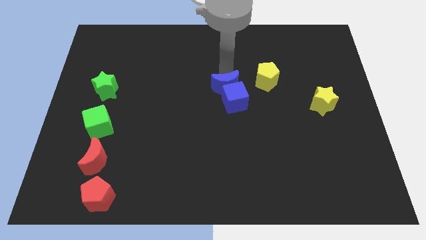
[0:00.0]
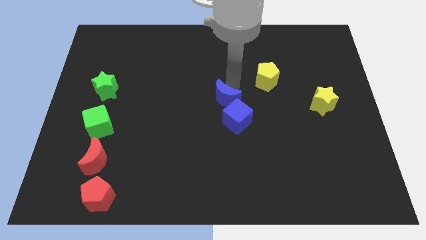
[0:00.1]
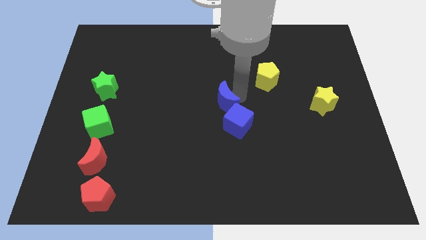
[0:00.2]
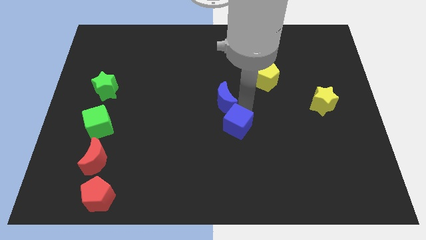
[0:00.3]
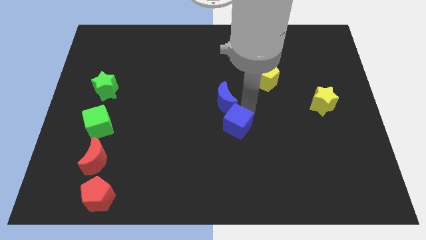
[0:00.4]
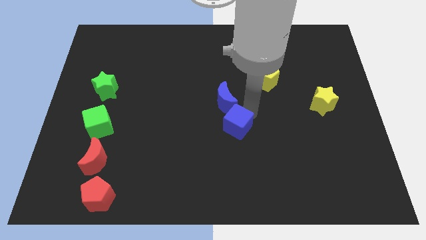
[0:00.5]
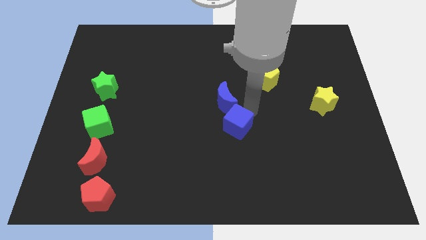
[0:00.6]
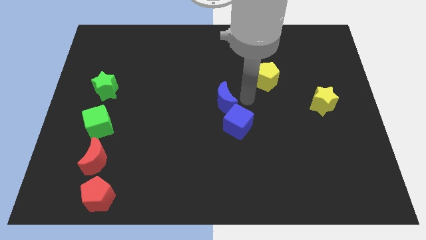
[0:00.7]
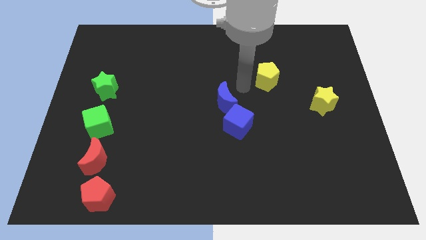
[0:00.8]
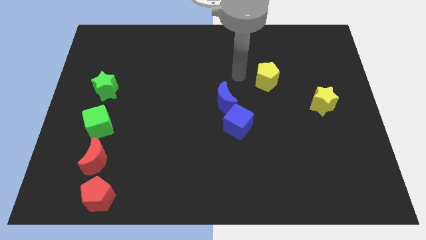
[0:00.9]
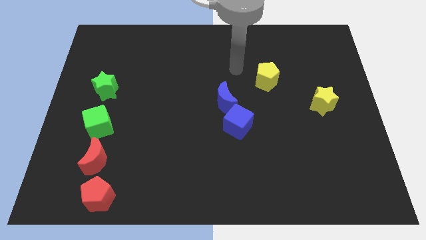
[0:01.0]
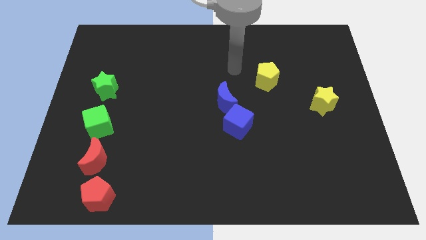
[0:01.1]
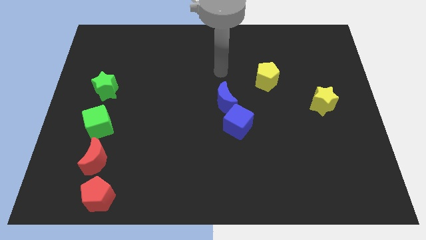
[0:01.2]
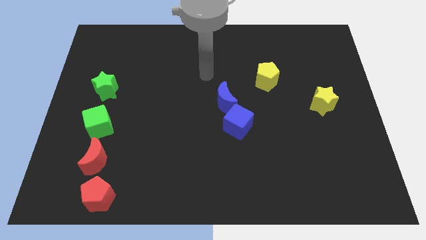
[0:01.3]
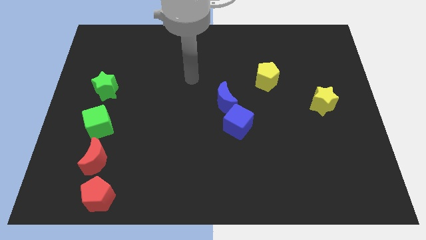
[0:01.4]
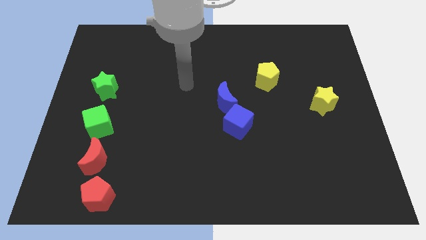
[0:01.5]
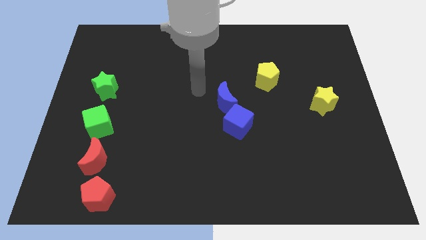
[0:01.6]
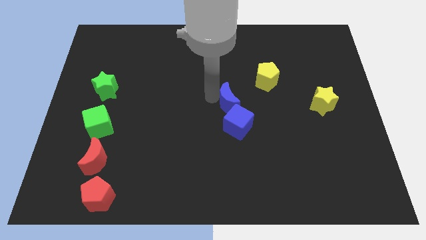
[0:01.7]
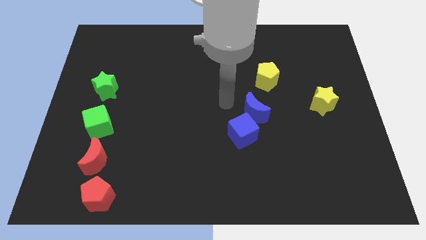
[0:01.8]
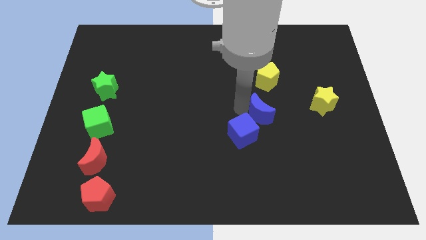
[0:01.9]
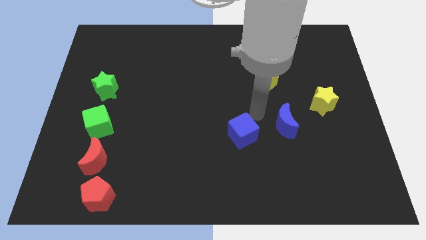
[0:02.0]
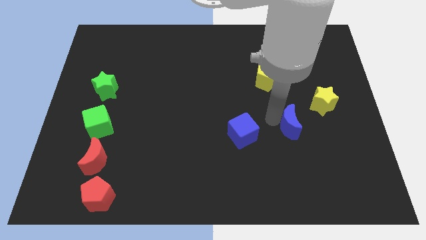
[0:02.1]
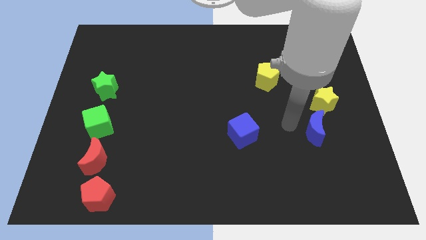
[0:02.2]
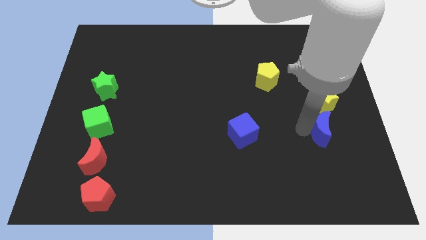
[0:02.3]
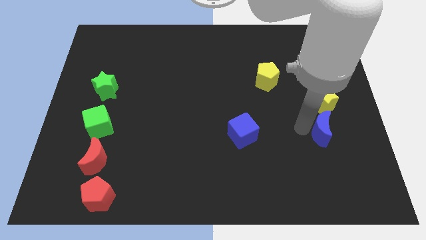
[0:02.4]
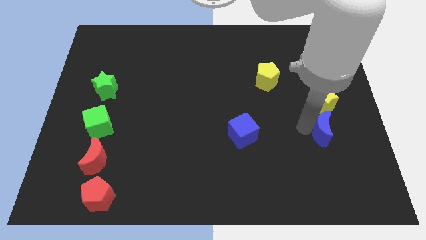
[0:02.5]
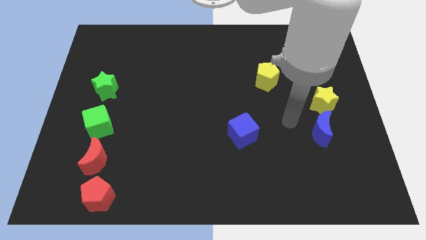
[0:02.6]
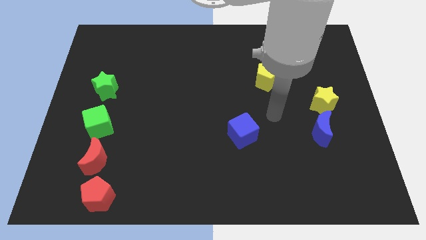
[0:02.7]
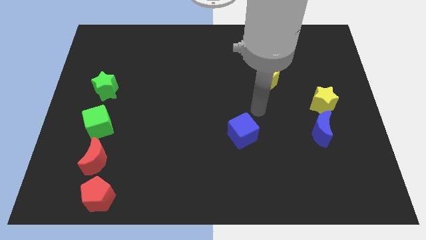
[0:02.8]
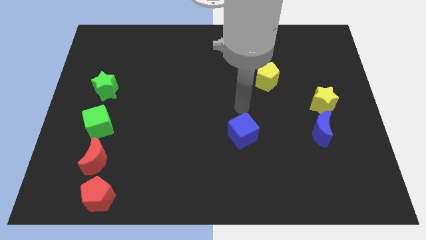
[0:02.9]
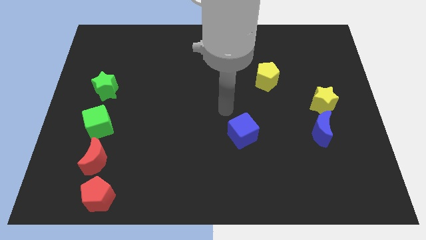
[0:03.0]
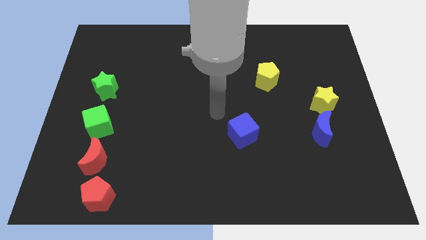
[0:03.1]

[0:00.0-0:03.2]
separate blue blocks from each other

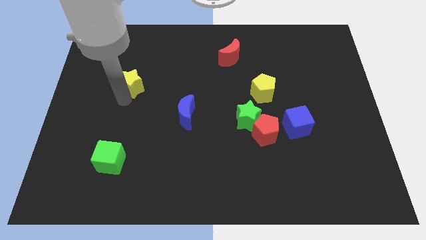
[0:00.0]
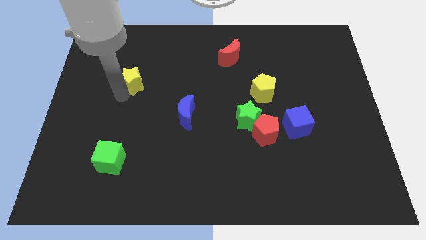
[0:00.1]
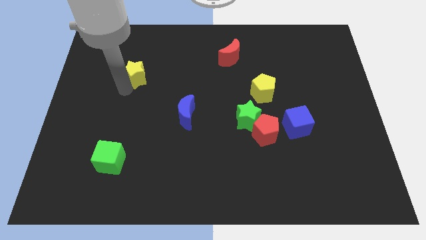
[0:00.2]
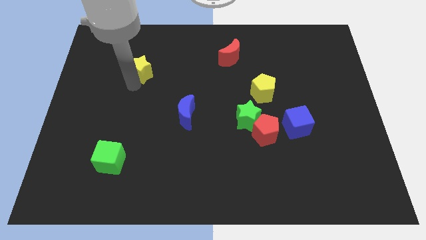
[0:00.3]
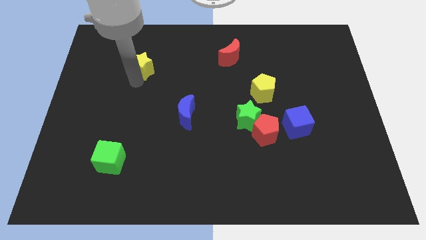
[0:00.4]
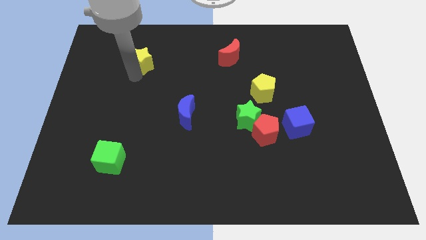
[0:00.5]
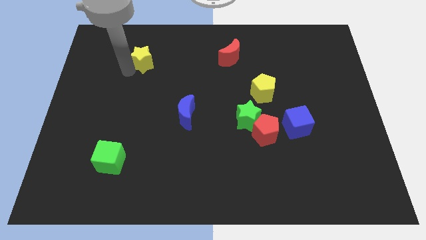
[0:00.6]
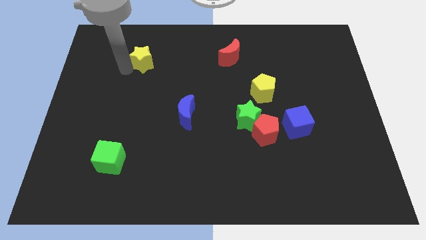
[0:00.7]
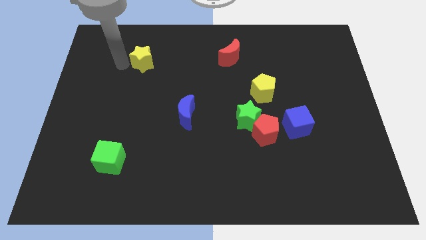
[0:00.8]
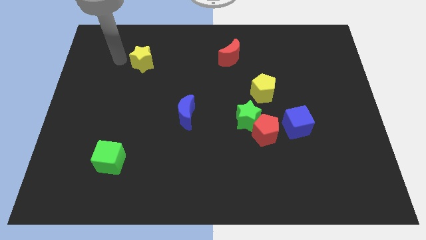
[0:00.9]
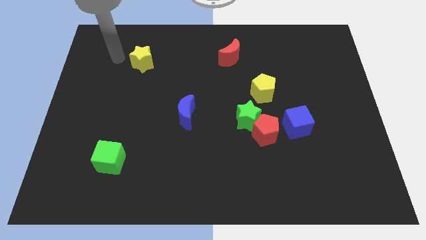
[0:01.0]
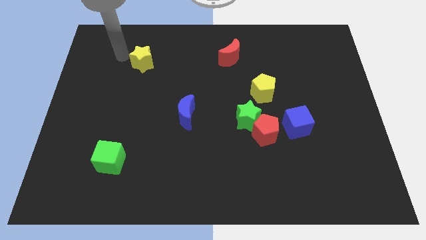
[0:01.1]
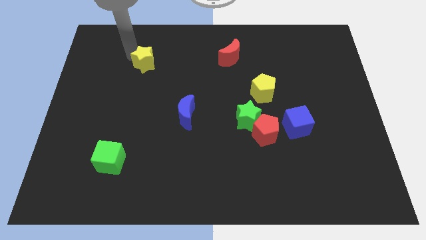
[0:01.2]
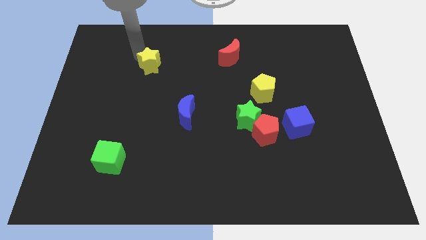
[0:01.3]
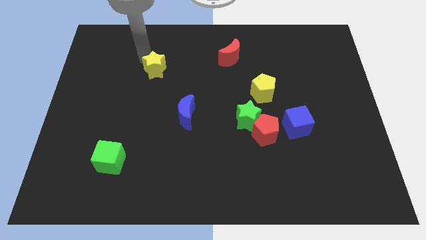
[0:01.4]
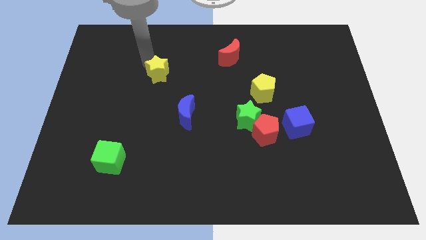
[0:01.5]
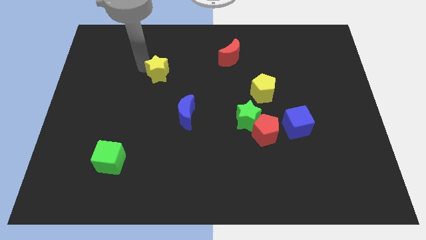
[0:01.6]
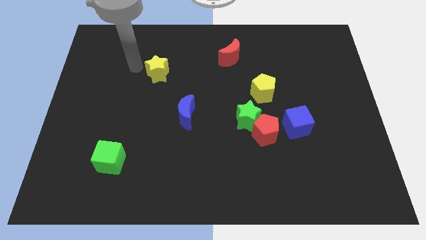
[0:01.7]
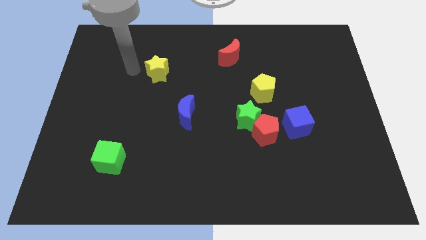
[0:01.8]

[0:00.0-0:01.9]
push the yellow star diagonally to the top left of the blue moon

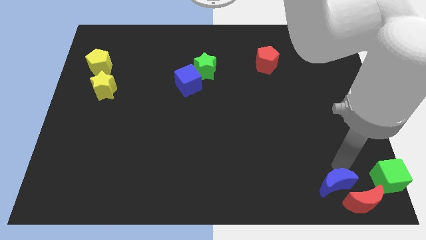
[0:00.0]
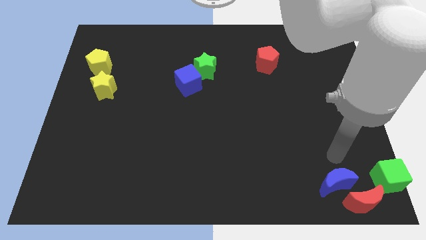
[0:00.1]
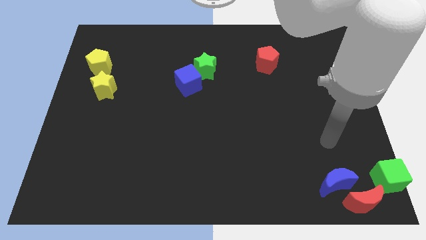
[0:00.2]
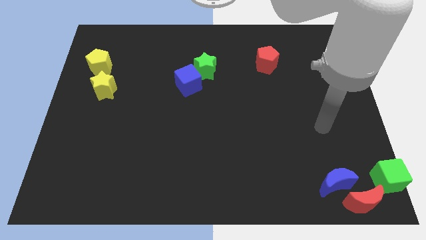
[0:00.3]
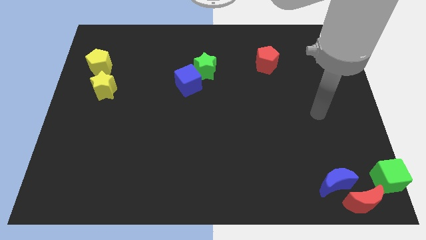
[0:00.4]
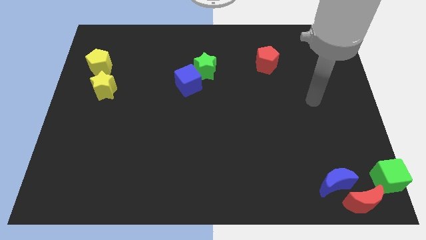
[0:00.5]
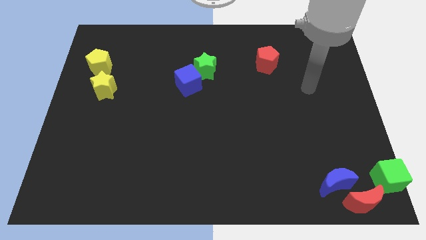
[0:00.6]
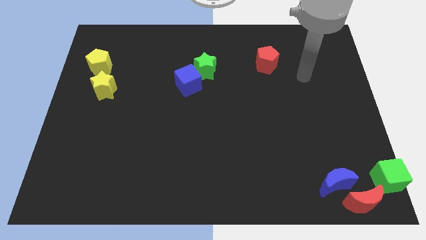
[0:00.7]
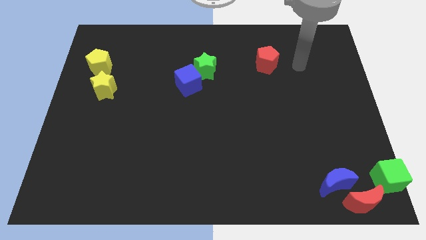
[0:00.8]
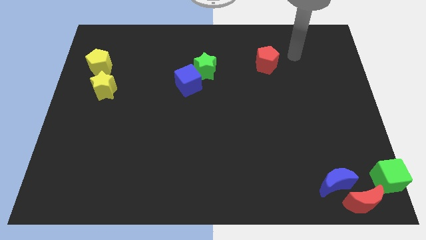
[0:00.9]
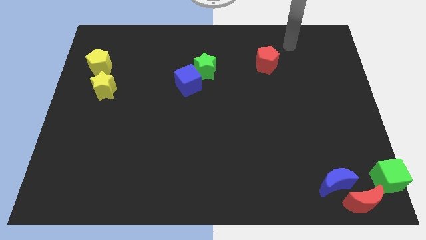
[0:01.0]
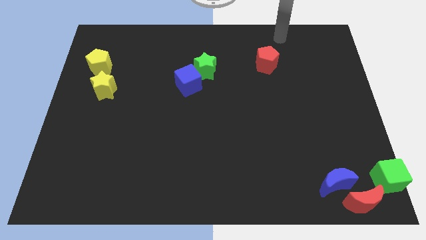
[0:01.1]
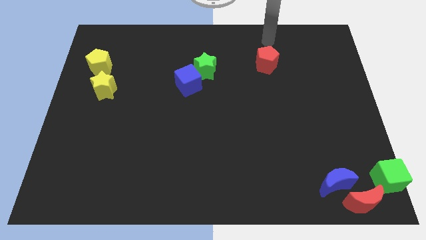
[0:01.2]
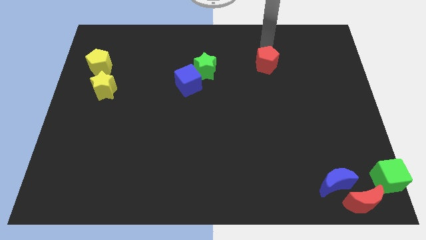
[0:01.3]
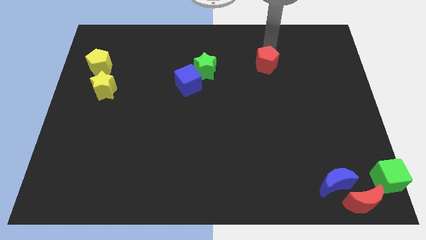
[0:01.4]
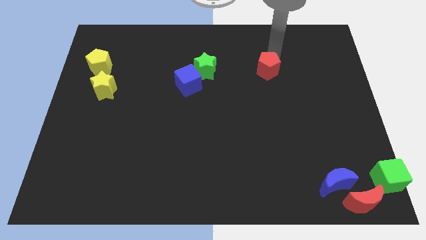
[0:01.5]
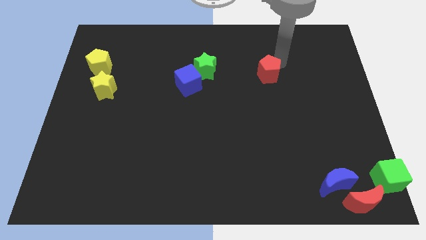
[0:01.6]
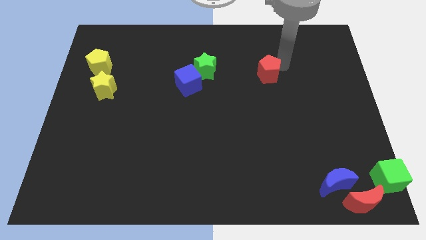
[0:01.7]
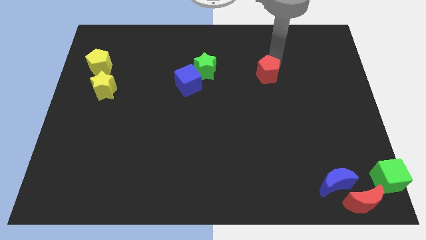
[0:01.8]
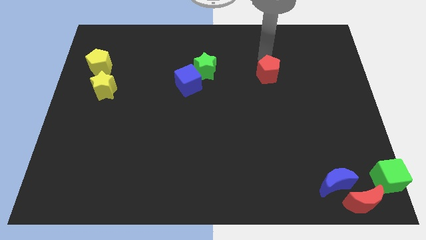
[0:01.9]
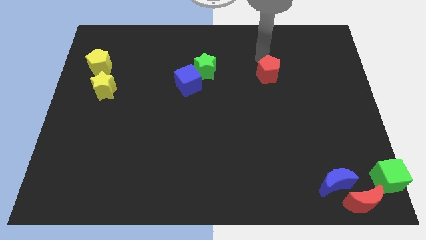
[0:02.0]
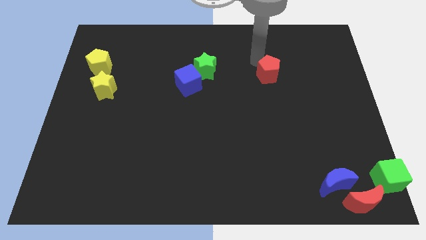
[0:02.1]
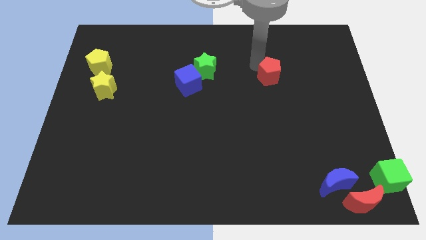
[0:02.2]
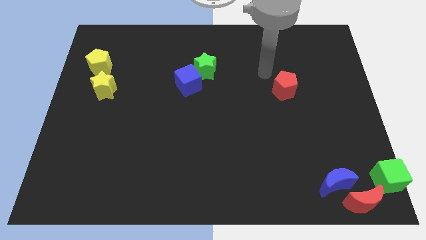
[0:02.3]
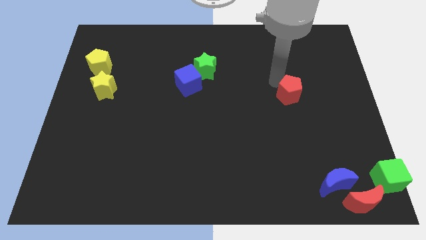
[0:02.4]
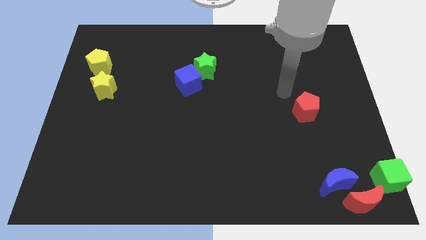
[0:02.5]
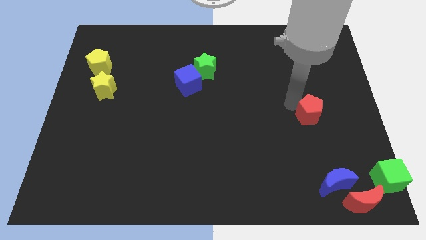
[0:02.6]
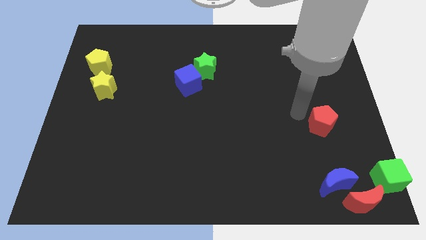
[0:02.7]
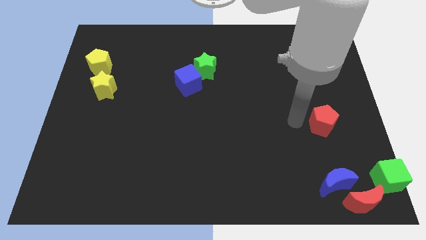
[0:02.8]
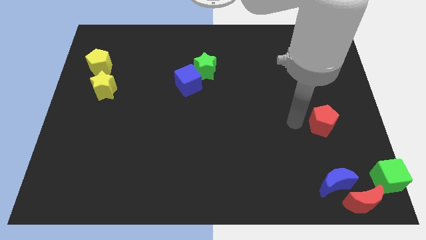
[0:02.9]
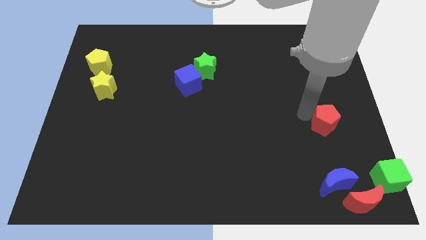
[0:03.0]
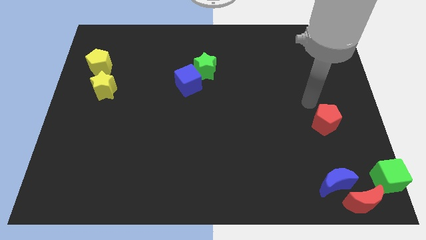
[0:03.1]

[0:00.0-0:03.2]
place the red pentagon vertical to the blue moon on the top

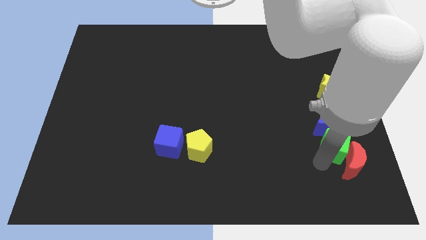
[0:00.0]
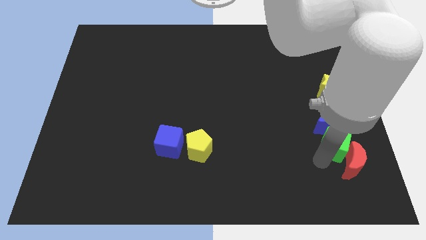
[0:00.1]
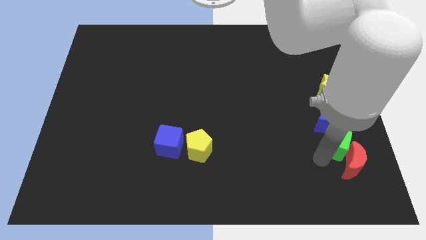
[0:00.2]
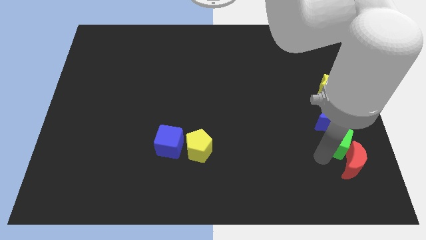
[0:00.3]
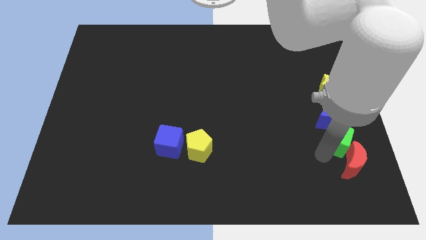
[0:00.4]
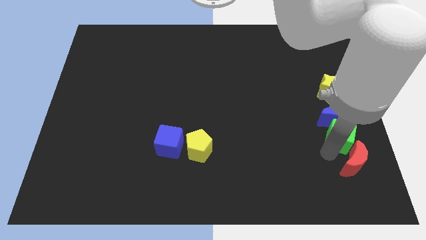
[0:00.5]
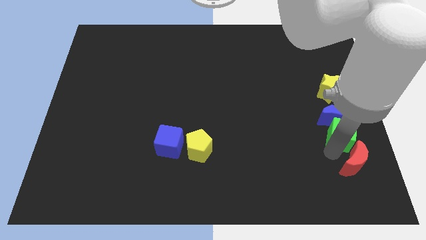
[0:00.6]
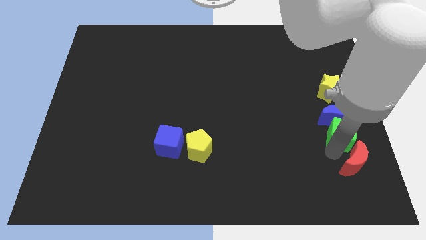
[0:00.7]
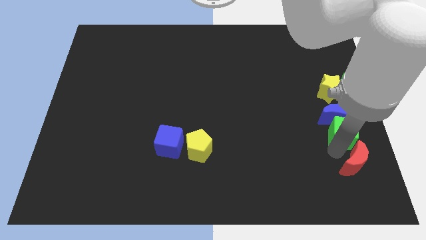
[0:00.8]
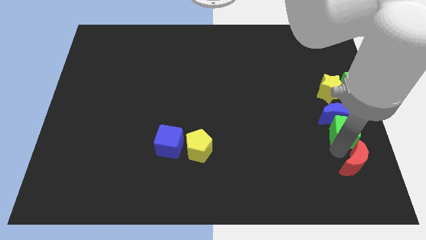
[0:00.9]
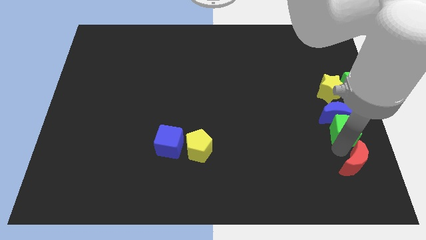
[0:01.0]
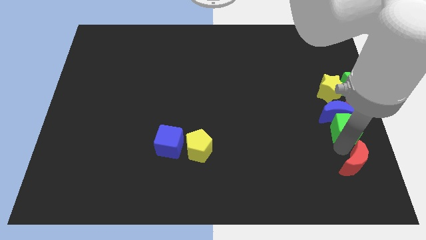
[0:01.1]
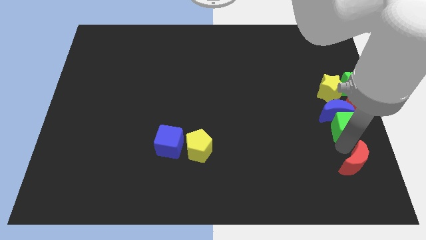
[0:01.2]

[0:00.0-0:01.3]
move green cube and blue moon below the yellow star
